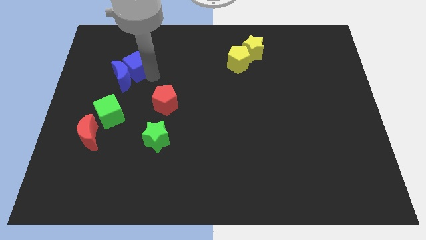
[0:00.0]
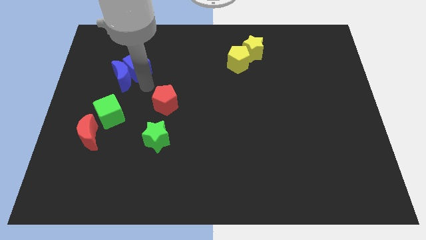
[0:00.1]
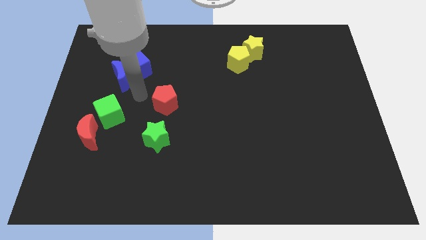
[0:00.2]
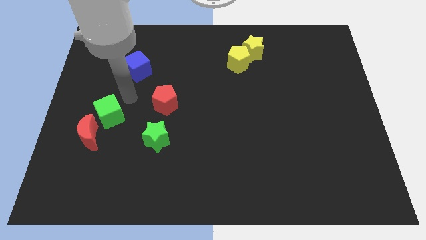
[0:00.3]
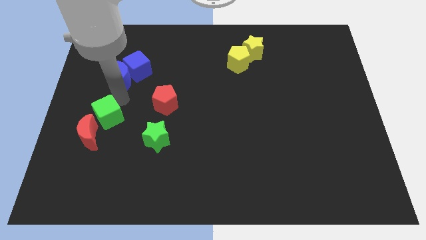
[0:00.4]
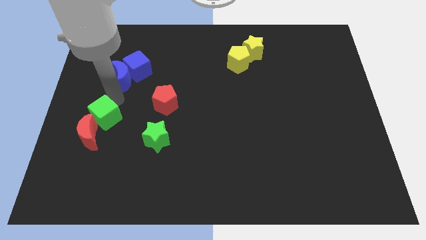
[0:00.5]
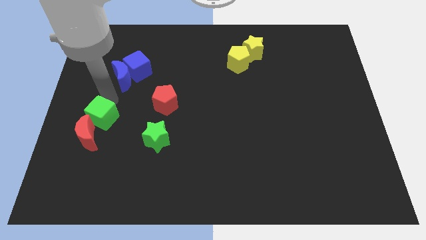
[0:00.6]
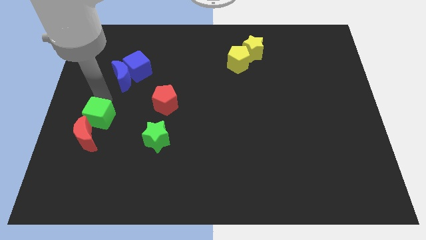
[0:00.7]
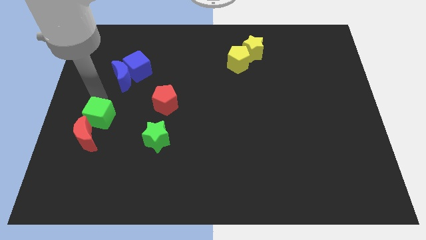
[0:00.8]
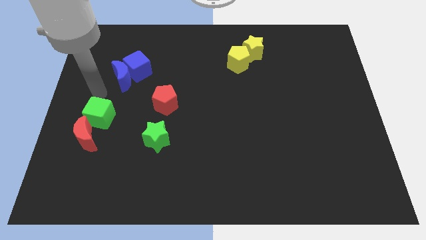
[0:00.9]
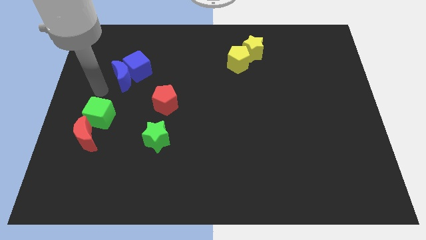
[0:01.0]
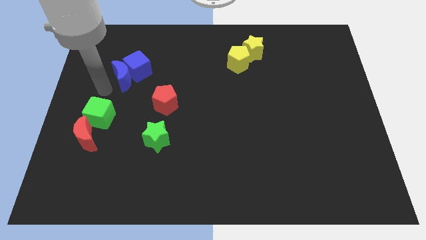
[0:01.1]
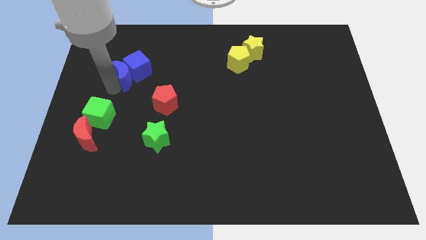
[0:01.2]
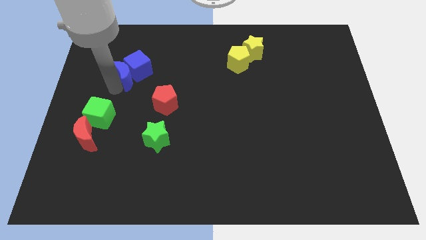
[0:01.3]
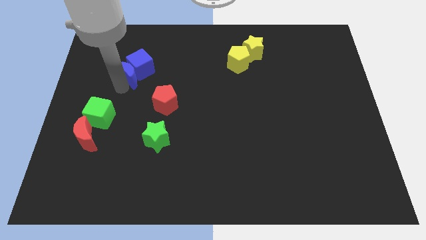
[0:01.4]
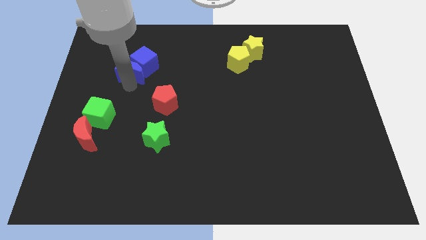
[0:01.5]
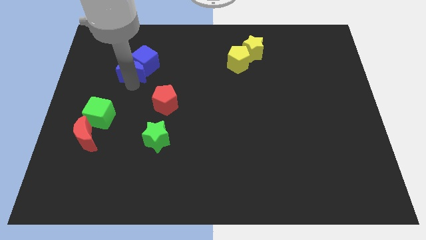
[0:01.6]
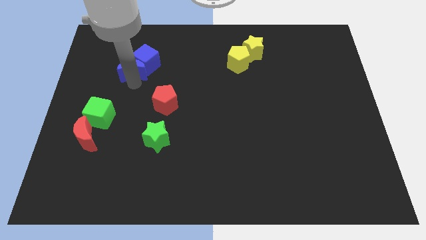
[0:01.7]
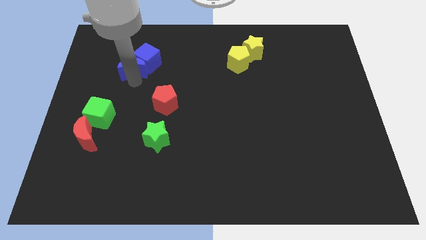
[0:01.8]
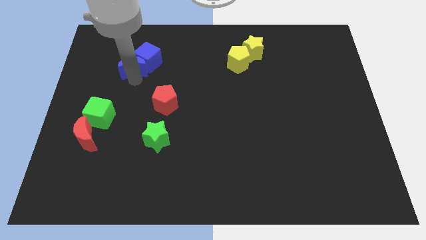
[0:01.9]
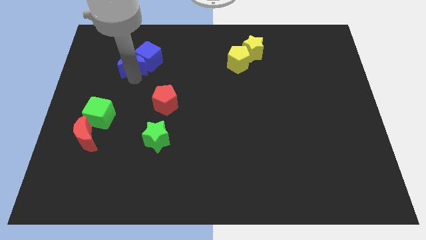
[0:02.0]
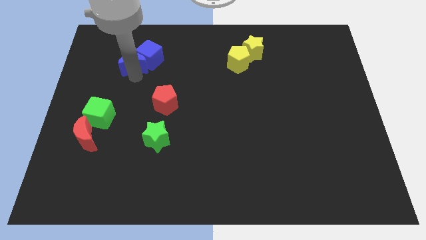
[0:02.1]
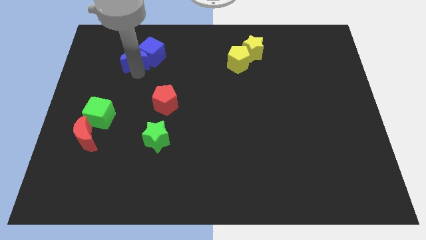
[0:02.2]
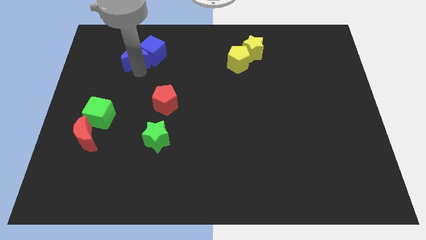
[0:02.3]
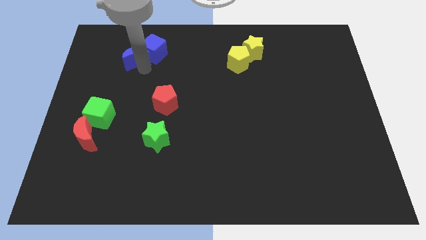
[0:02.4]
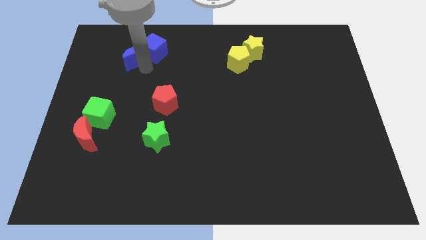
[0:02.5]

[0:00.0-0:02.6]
move the blue blocks to the top side of the table

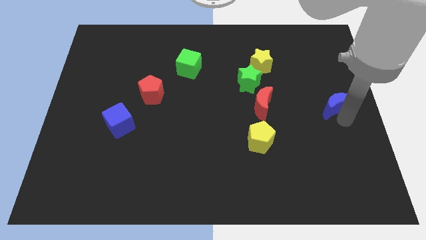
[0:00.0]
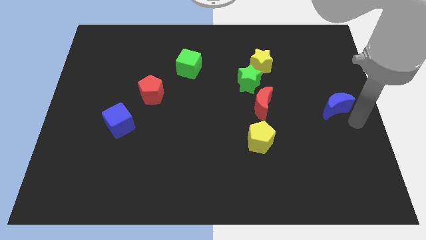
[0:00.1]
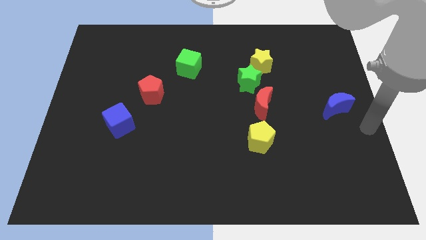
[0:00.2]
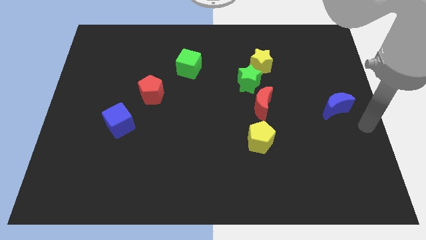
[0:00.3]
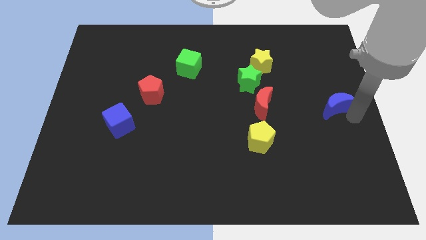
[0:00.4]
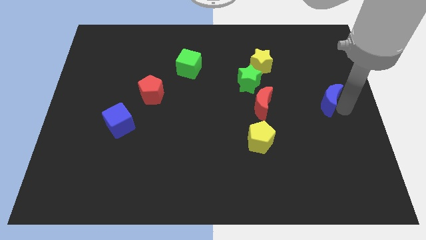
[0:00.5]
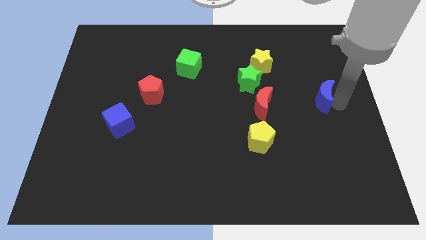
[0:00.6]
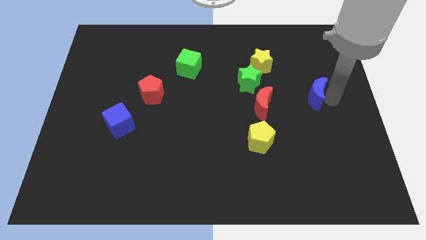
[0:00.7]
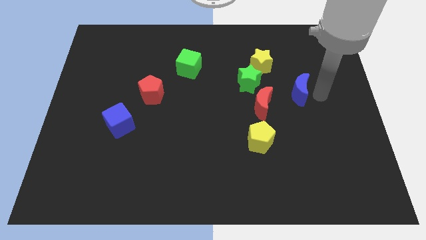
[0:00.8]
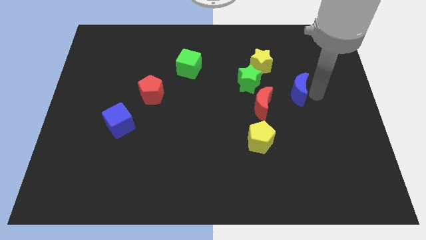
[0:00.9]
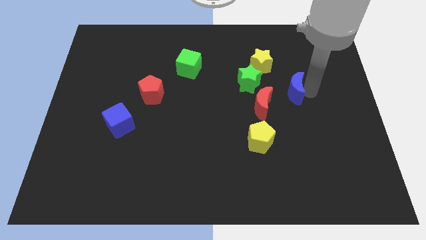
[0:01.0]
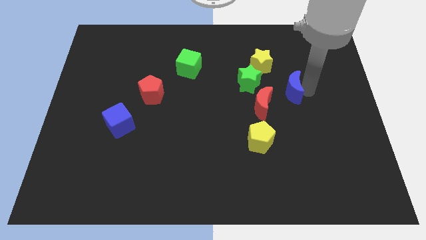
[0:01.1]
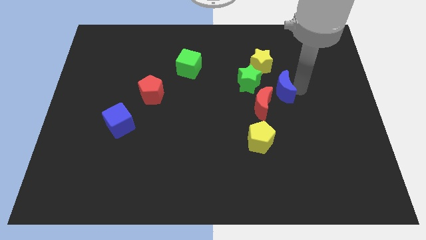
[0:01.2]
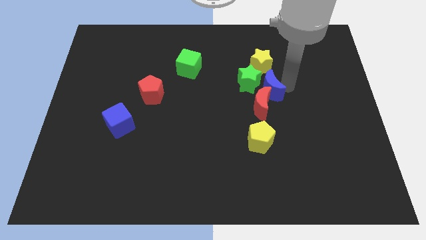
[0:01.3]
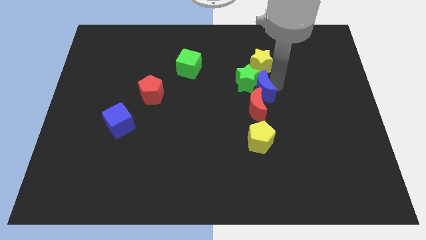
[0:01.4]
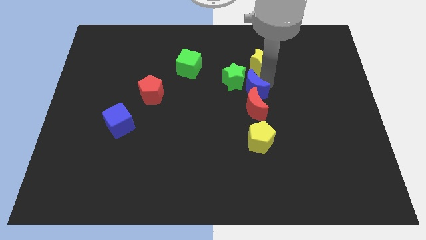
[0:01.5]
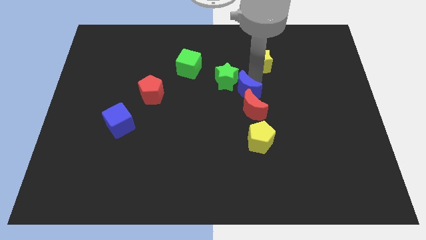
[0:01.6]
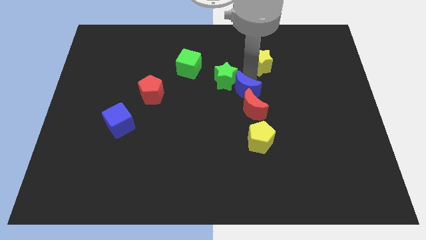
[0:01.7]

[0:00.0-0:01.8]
push the blue crescent into the red moon

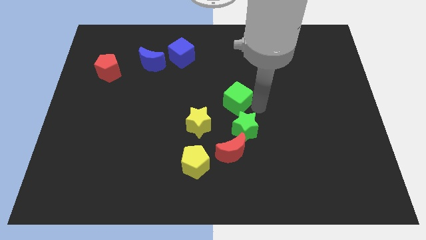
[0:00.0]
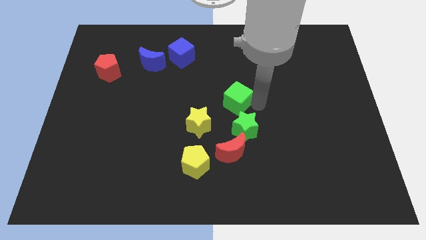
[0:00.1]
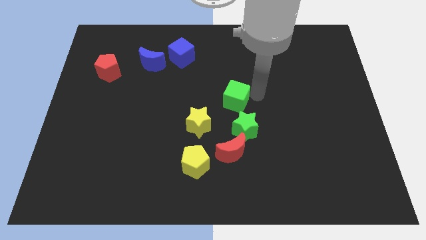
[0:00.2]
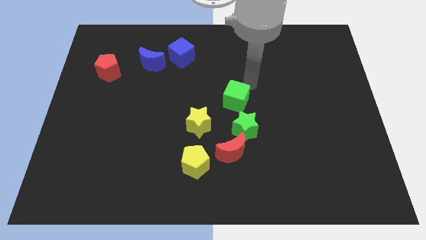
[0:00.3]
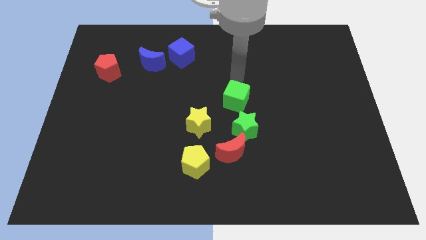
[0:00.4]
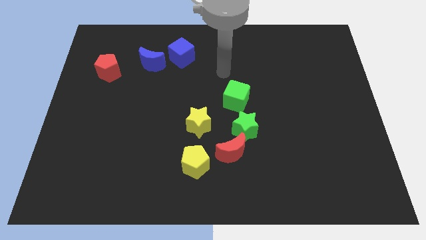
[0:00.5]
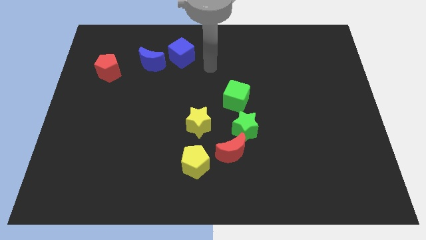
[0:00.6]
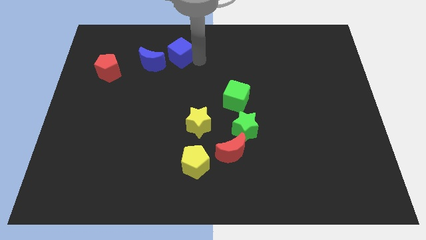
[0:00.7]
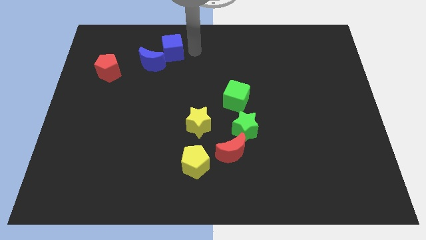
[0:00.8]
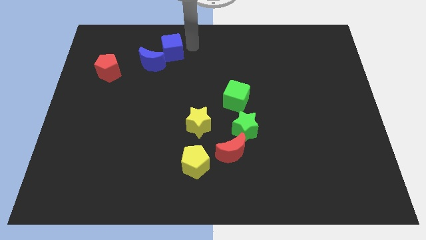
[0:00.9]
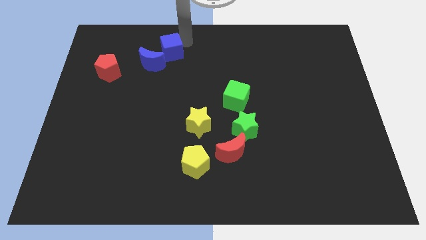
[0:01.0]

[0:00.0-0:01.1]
tap on right of the blue cube with your arm

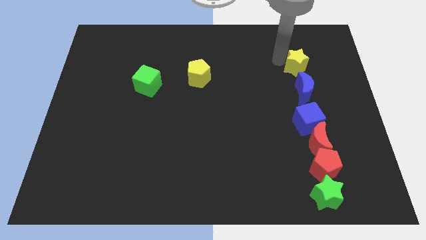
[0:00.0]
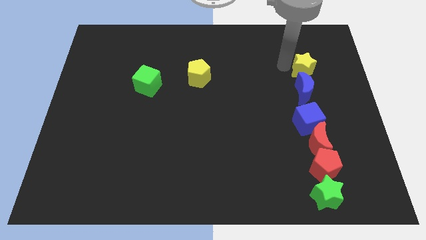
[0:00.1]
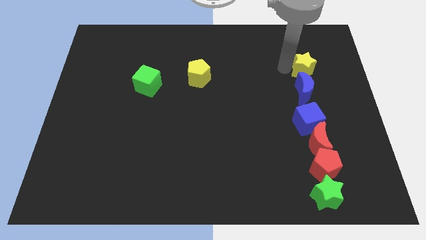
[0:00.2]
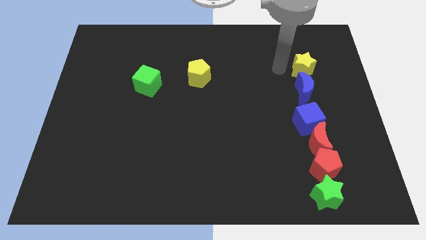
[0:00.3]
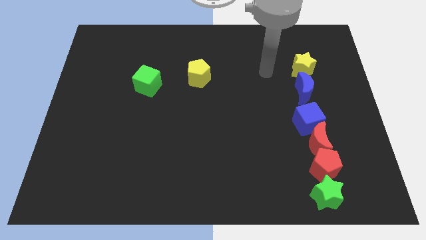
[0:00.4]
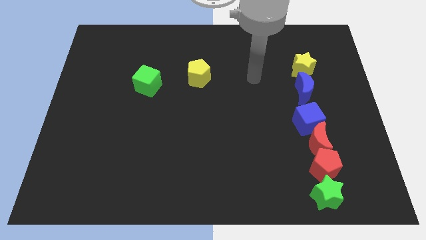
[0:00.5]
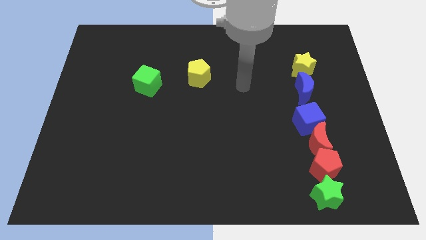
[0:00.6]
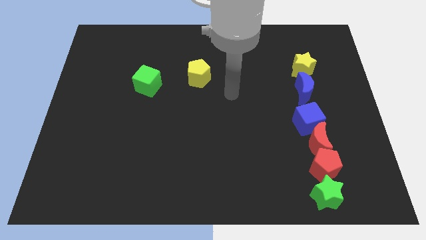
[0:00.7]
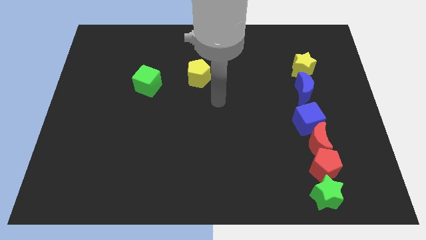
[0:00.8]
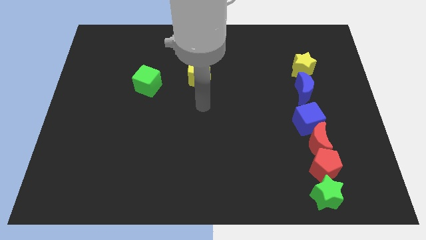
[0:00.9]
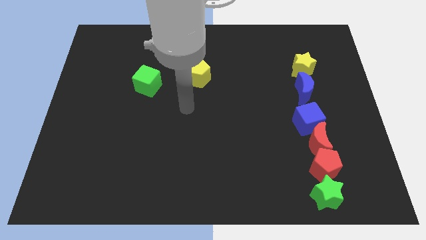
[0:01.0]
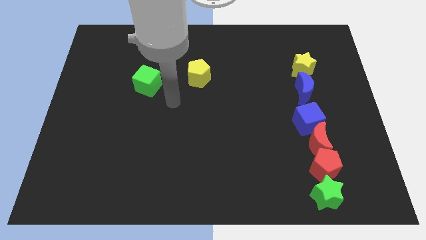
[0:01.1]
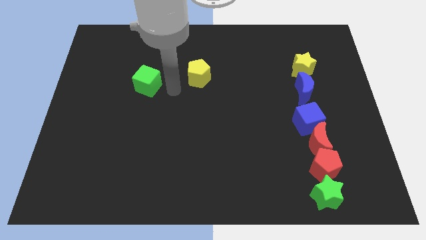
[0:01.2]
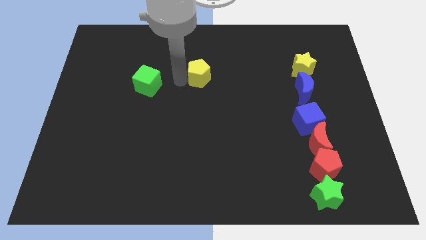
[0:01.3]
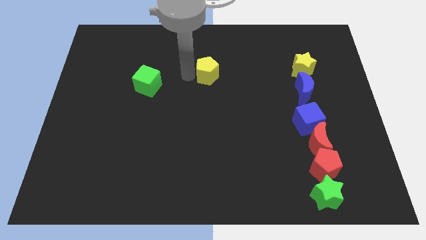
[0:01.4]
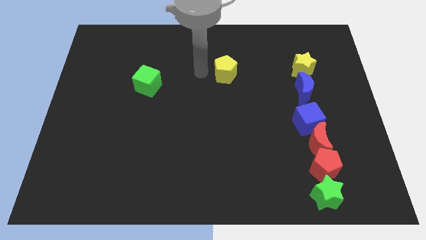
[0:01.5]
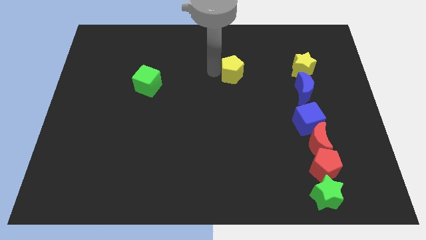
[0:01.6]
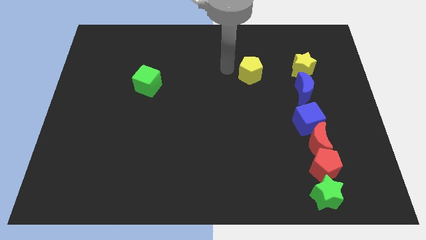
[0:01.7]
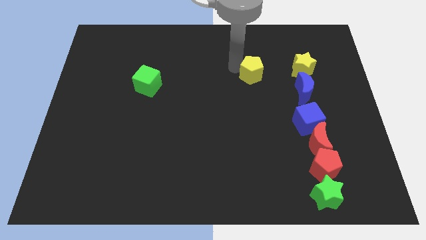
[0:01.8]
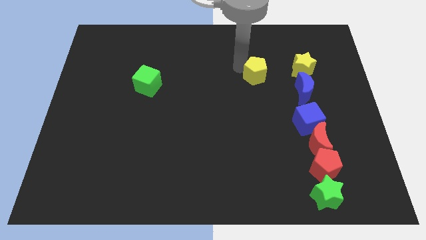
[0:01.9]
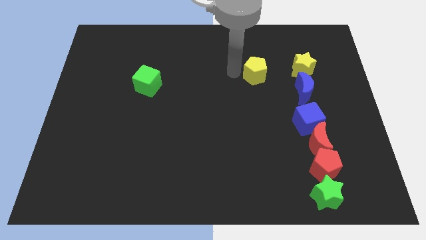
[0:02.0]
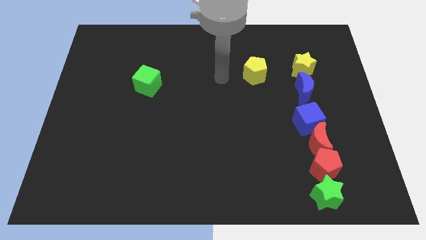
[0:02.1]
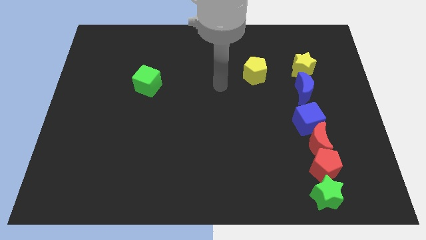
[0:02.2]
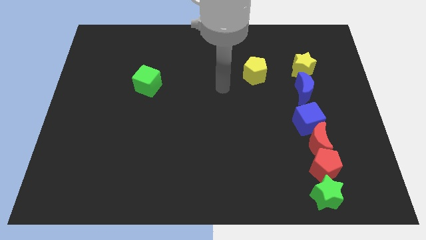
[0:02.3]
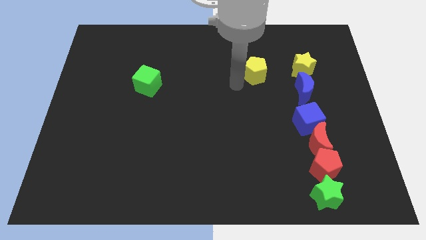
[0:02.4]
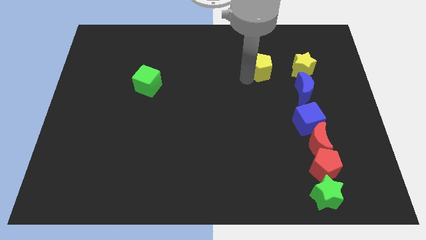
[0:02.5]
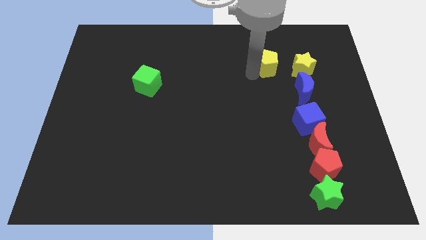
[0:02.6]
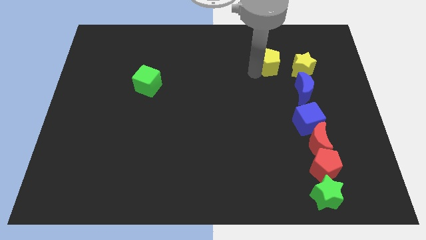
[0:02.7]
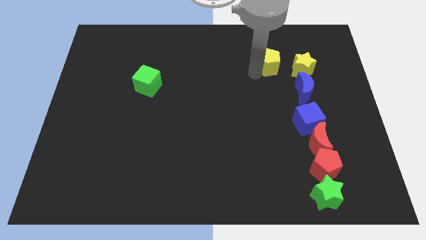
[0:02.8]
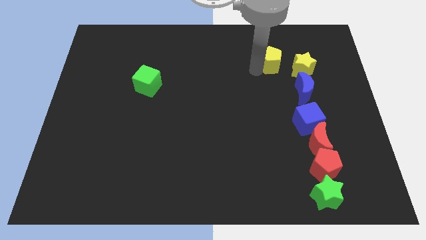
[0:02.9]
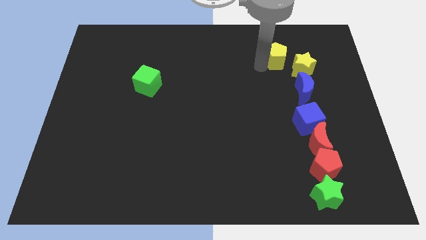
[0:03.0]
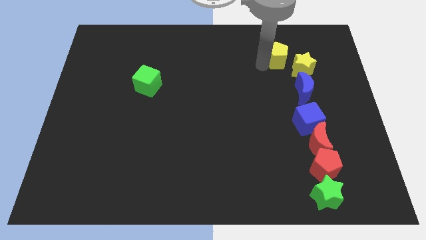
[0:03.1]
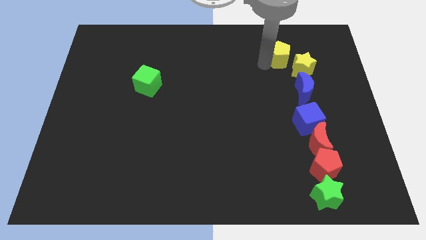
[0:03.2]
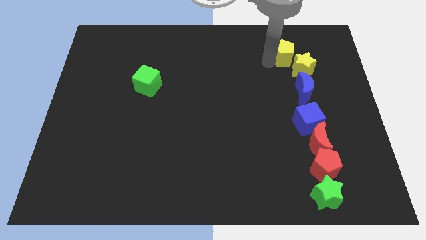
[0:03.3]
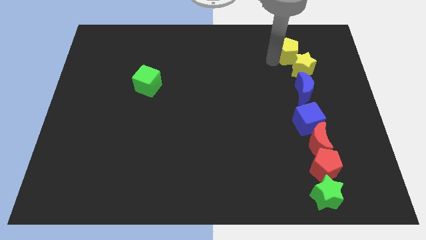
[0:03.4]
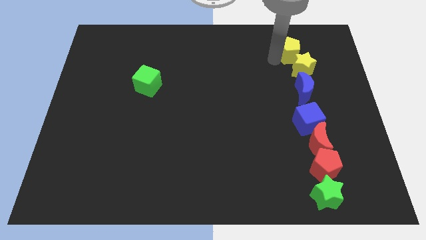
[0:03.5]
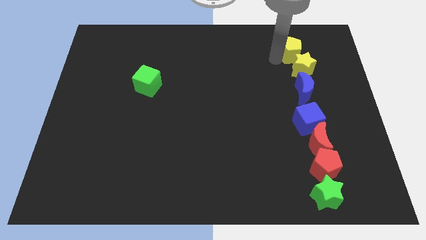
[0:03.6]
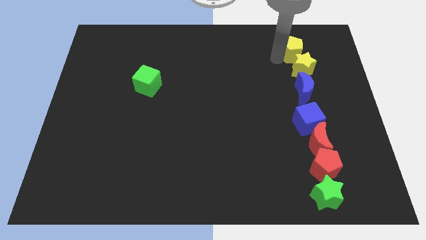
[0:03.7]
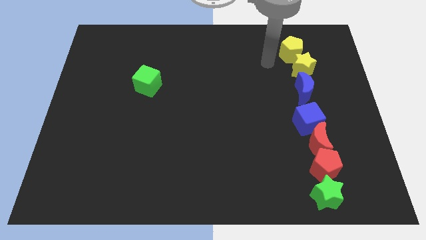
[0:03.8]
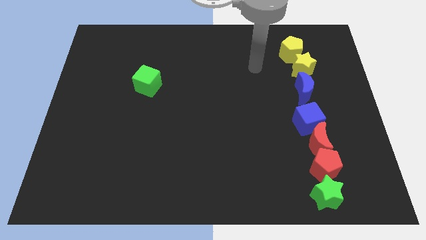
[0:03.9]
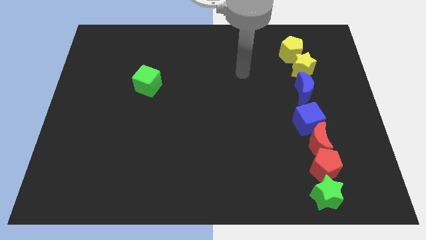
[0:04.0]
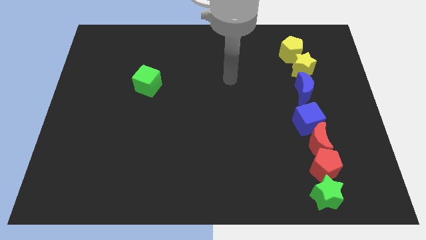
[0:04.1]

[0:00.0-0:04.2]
place the yellow pentagon above the yellow star
